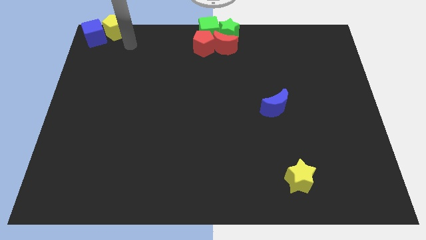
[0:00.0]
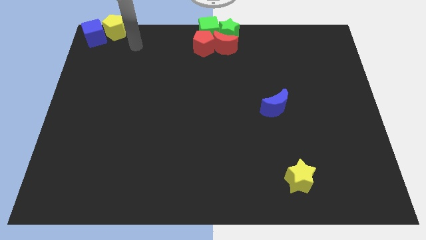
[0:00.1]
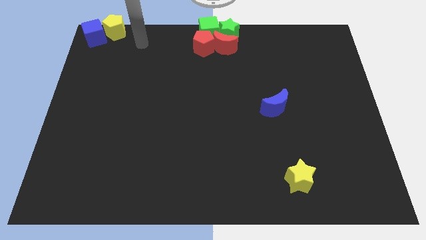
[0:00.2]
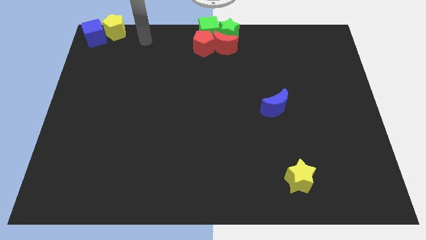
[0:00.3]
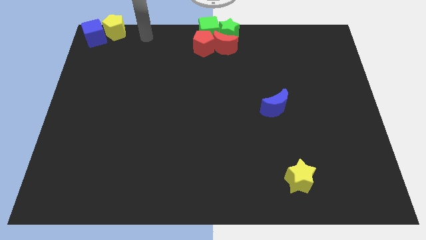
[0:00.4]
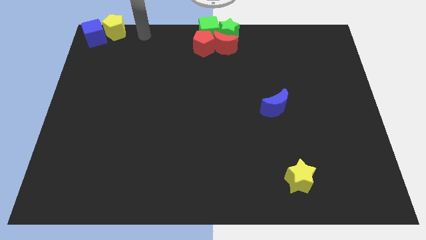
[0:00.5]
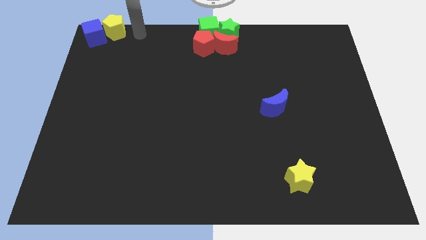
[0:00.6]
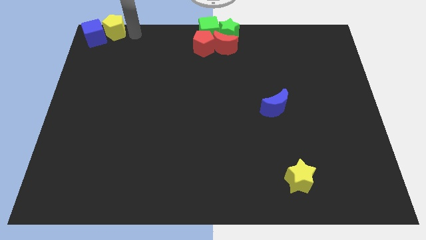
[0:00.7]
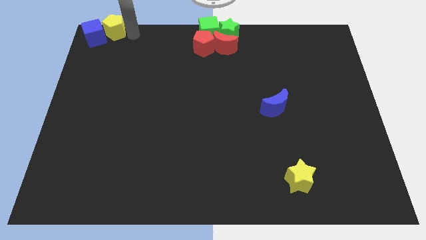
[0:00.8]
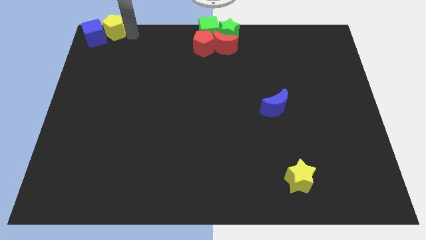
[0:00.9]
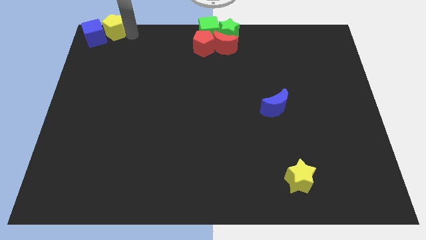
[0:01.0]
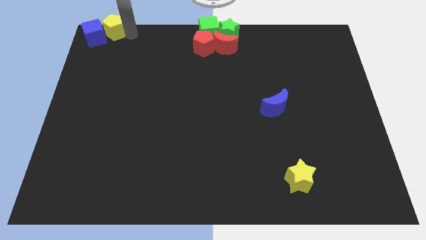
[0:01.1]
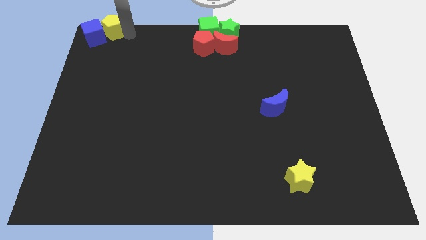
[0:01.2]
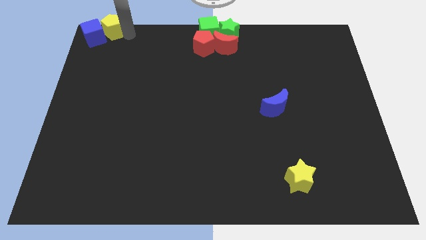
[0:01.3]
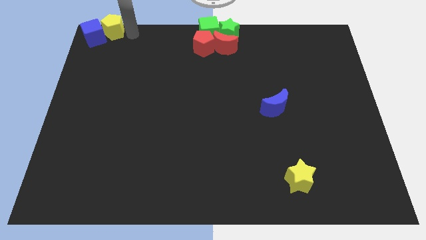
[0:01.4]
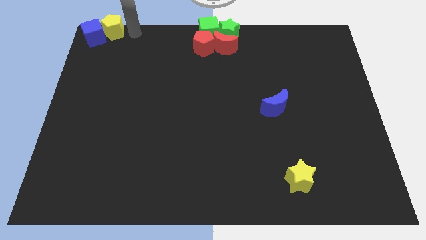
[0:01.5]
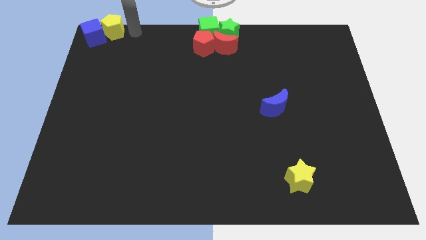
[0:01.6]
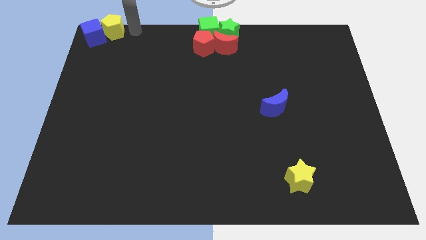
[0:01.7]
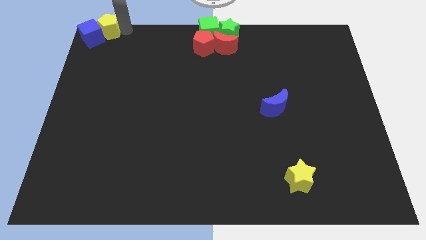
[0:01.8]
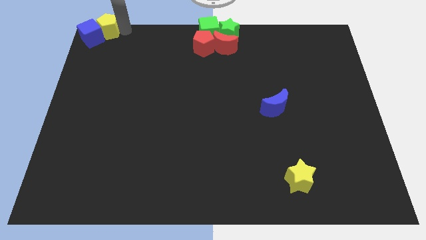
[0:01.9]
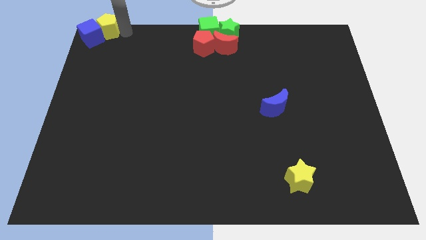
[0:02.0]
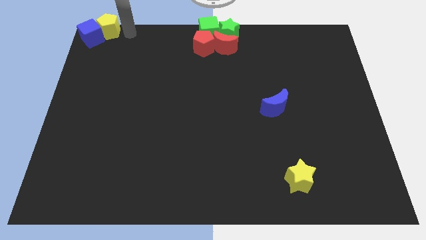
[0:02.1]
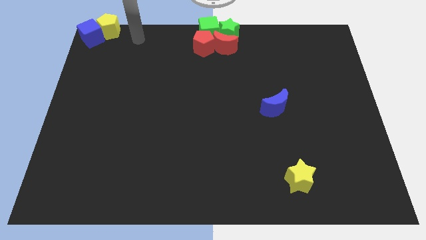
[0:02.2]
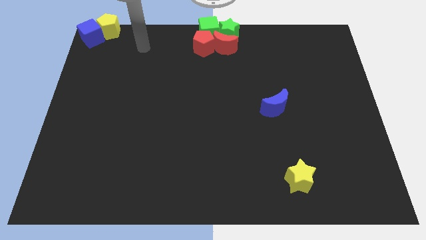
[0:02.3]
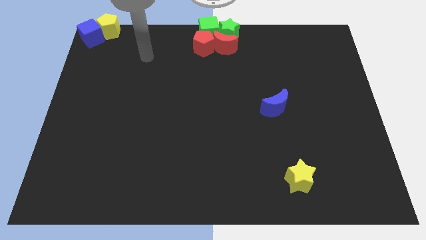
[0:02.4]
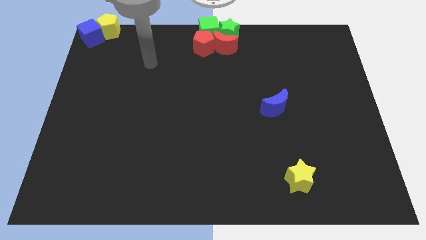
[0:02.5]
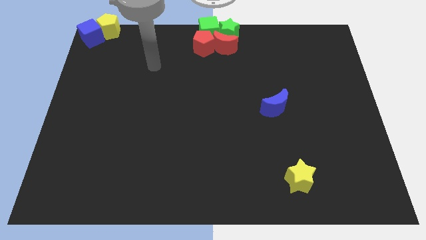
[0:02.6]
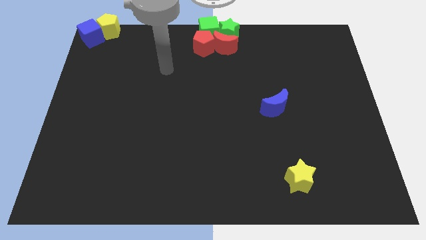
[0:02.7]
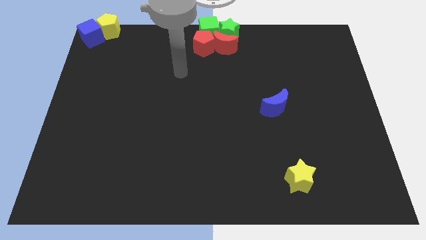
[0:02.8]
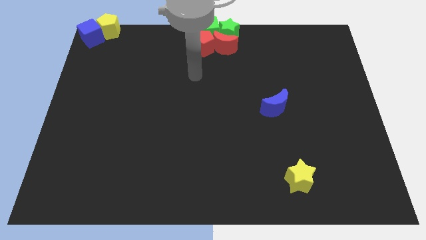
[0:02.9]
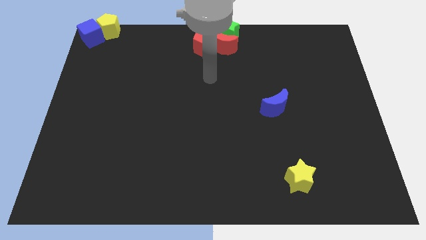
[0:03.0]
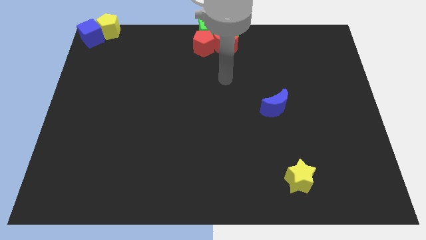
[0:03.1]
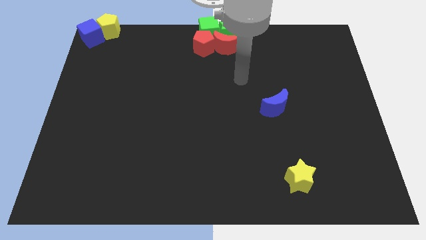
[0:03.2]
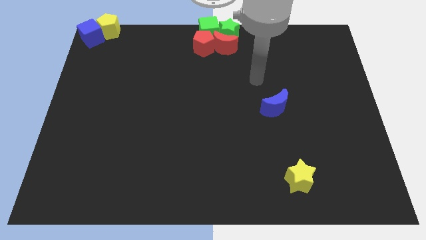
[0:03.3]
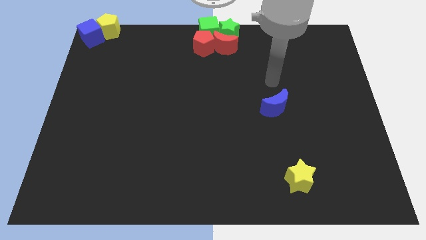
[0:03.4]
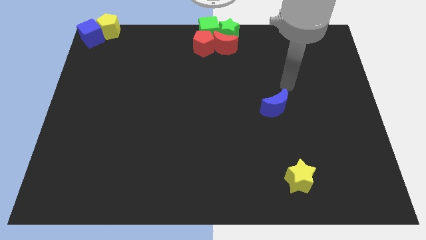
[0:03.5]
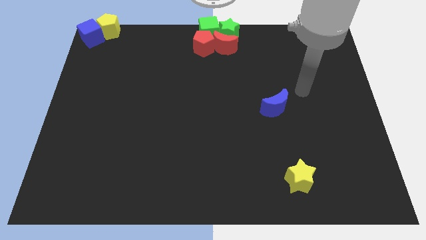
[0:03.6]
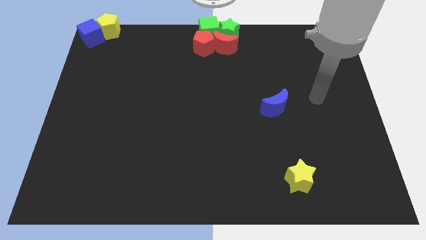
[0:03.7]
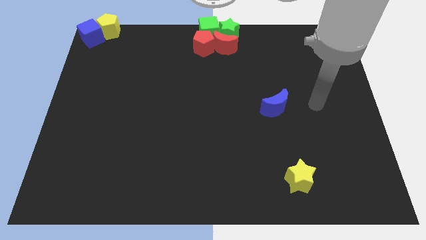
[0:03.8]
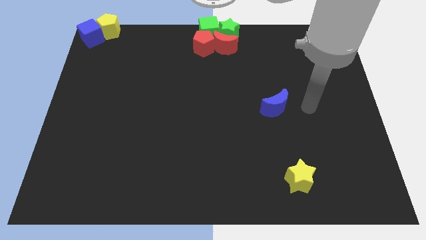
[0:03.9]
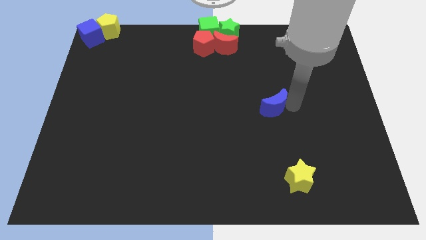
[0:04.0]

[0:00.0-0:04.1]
move your arm towards the blue crescent

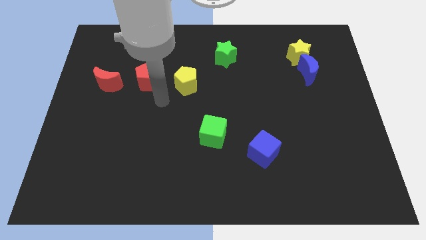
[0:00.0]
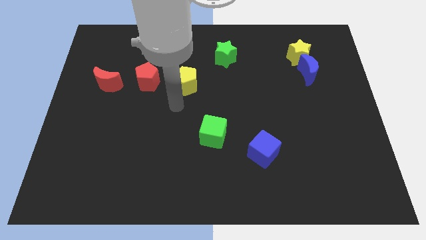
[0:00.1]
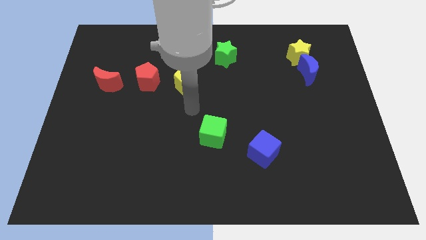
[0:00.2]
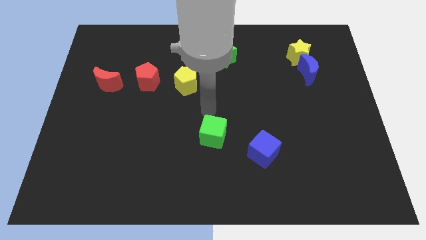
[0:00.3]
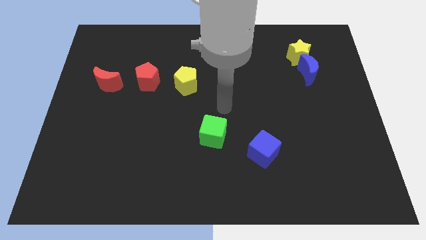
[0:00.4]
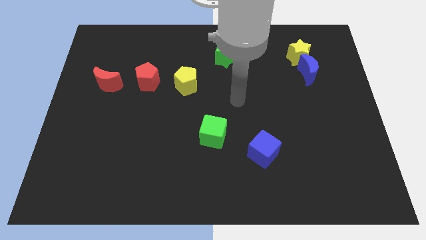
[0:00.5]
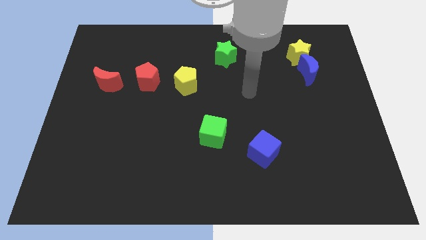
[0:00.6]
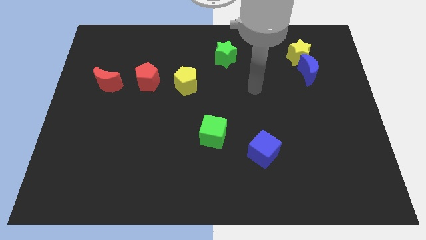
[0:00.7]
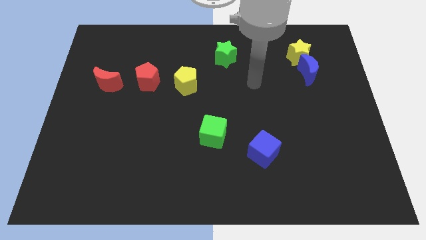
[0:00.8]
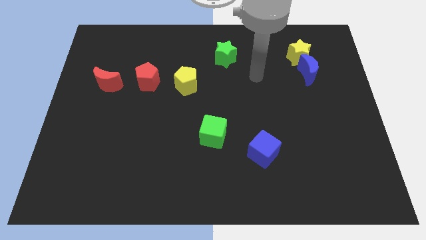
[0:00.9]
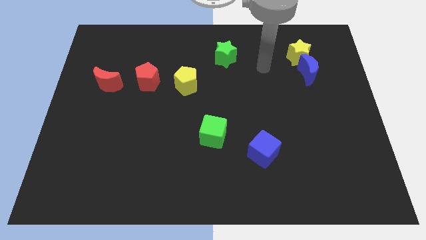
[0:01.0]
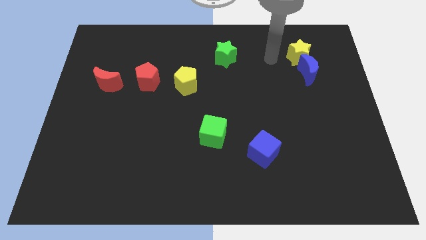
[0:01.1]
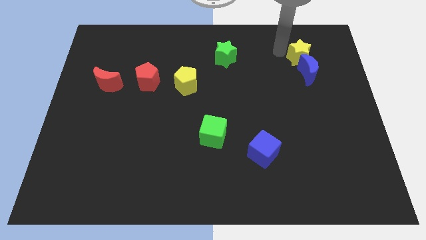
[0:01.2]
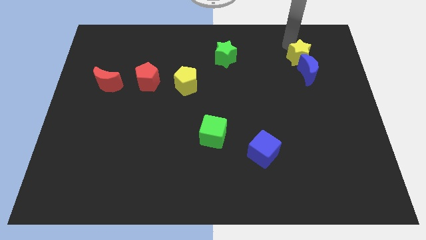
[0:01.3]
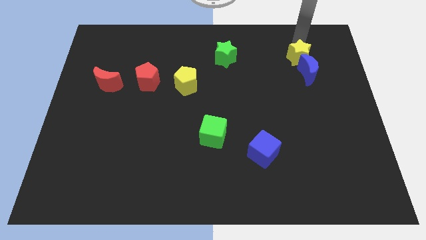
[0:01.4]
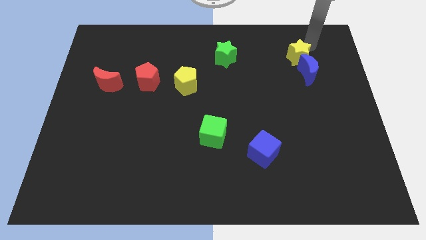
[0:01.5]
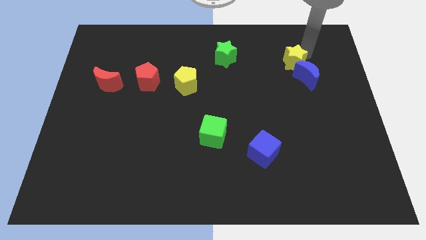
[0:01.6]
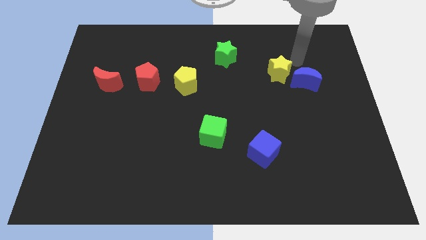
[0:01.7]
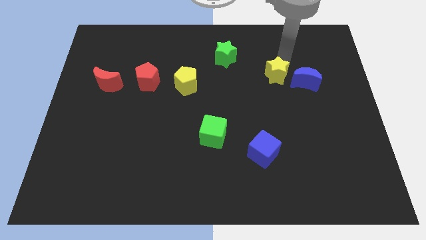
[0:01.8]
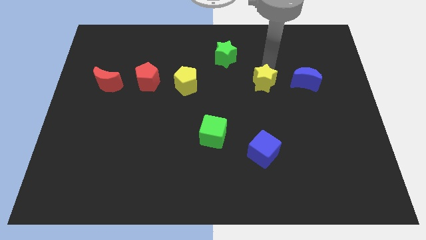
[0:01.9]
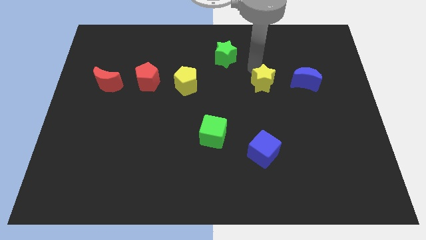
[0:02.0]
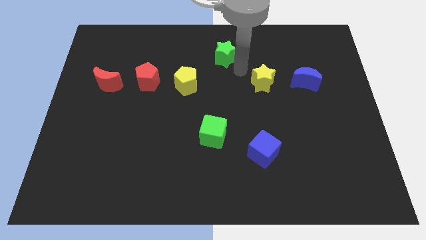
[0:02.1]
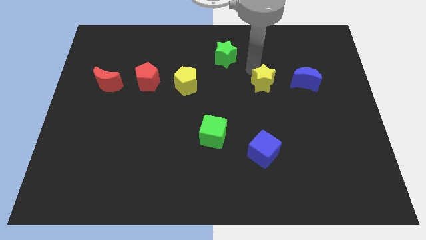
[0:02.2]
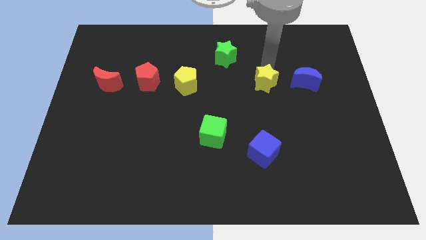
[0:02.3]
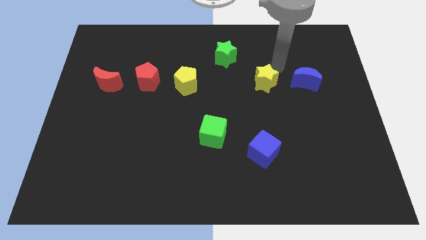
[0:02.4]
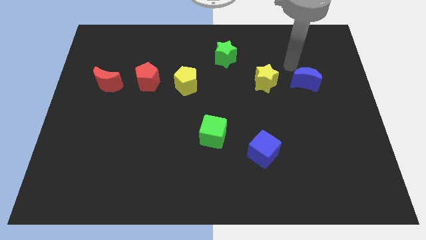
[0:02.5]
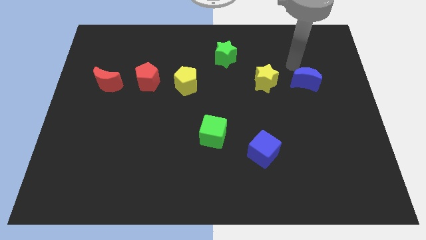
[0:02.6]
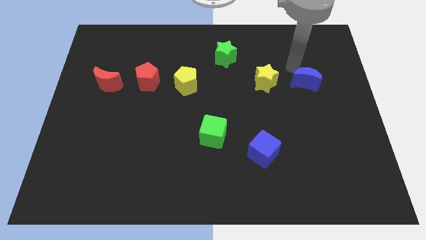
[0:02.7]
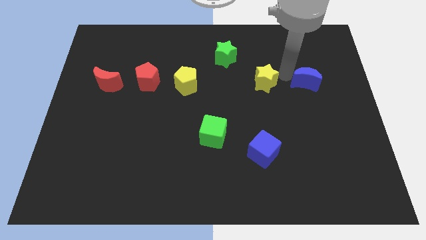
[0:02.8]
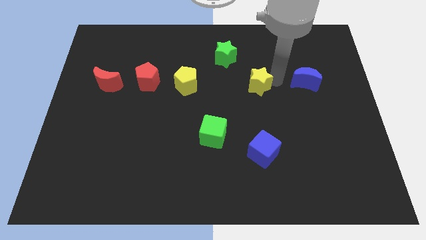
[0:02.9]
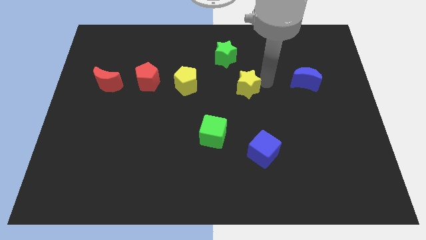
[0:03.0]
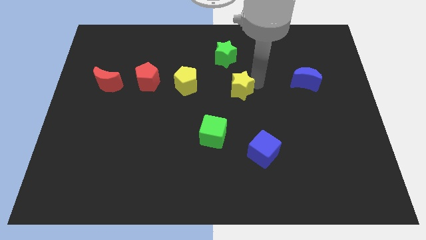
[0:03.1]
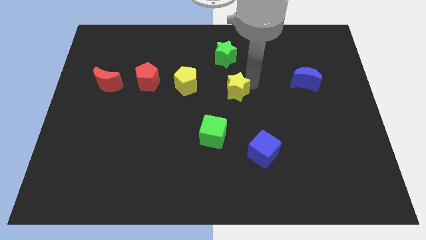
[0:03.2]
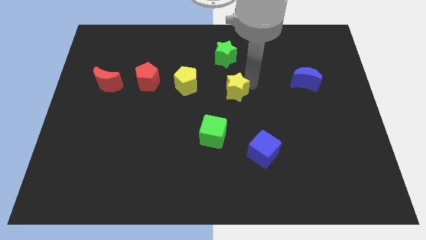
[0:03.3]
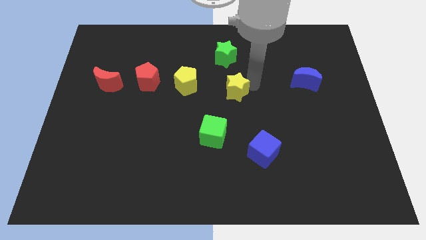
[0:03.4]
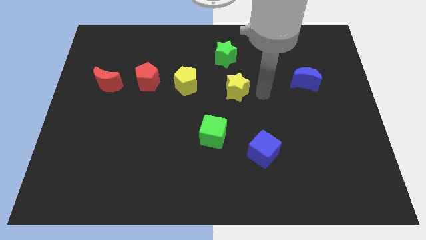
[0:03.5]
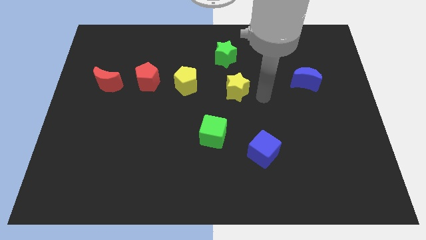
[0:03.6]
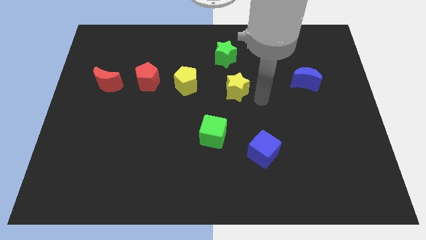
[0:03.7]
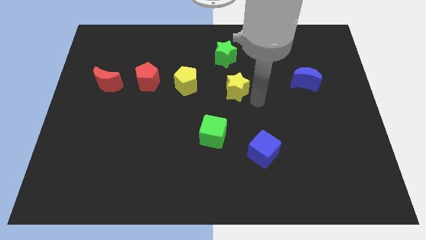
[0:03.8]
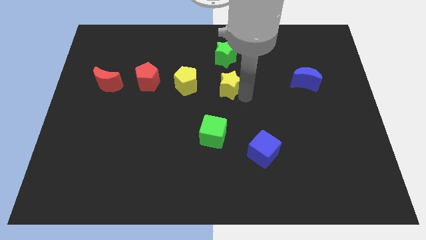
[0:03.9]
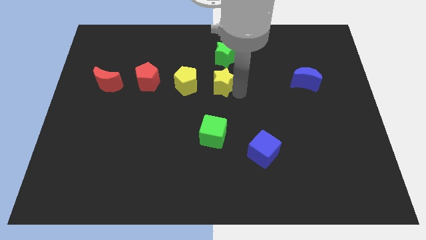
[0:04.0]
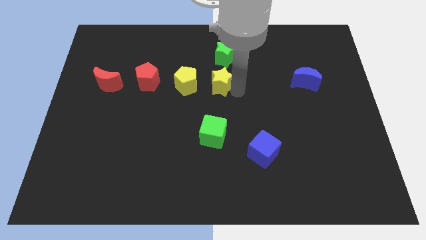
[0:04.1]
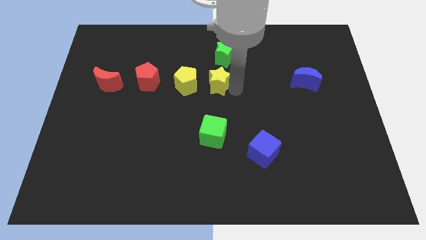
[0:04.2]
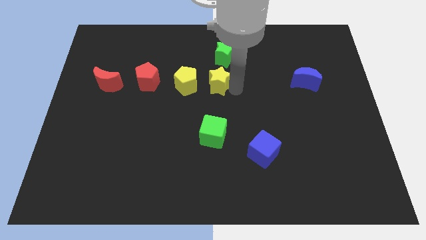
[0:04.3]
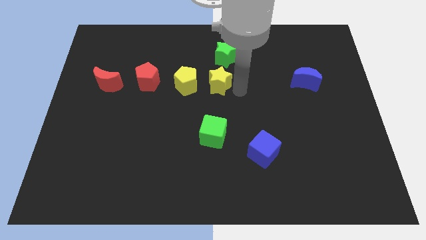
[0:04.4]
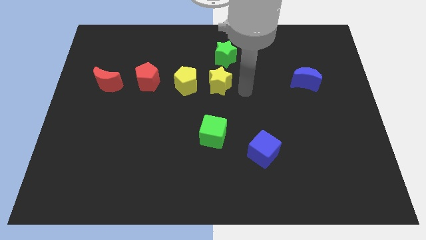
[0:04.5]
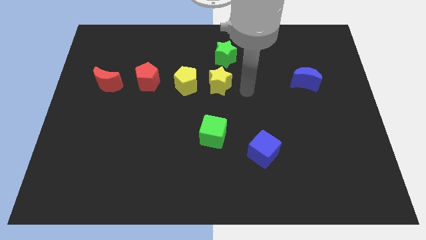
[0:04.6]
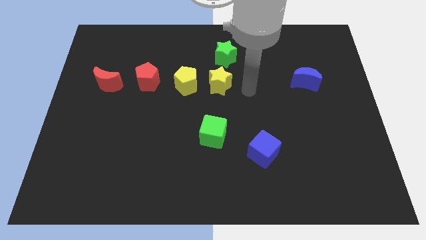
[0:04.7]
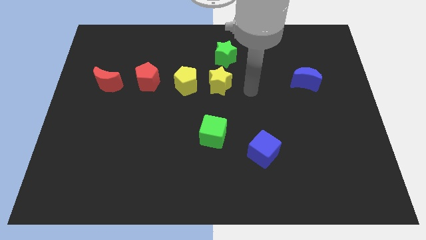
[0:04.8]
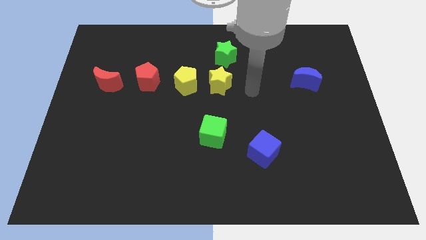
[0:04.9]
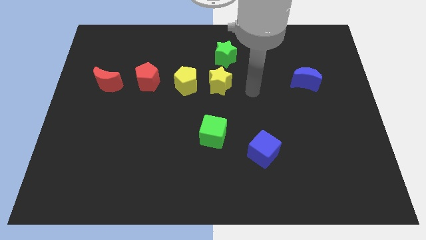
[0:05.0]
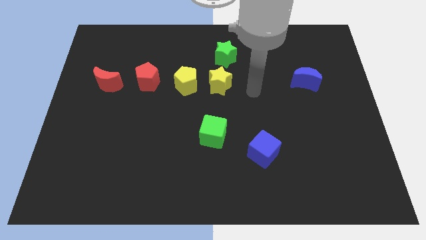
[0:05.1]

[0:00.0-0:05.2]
move yellow star to the right of yellow pentagon
